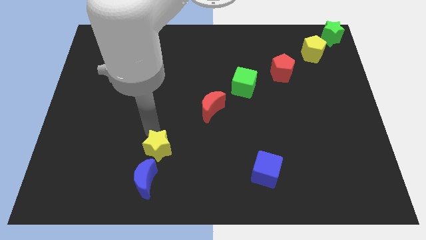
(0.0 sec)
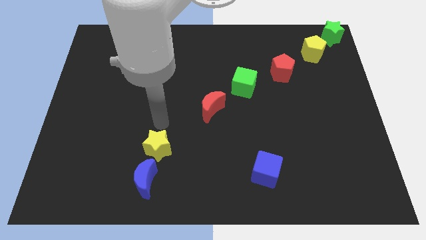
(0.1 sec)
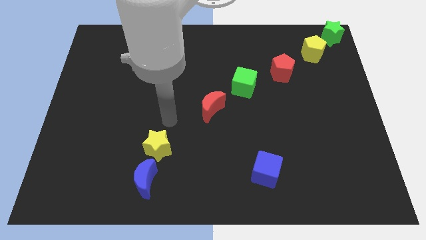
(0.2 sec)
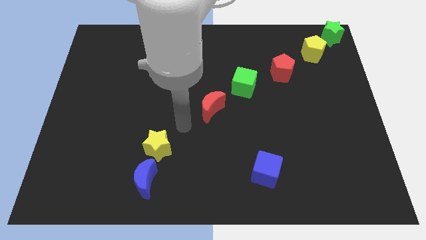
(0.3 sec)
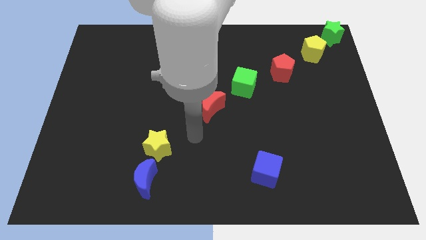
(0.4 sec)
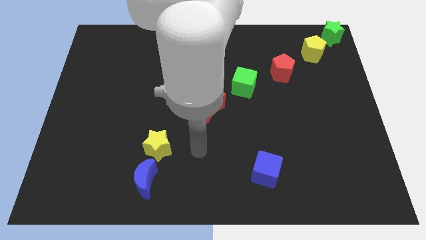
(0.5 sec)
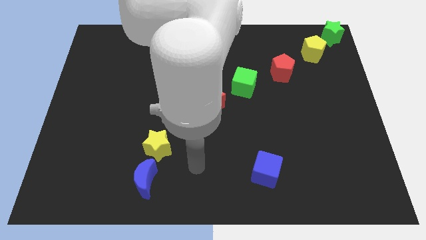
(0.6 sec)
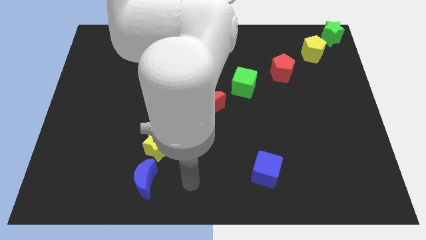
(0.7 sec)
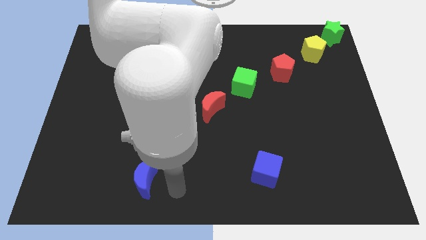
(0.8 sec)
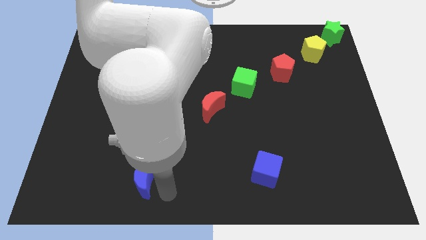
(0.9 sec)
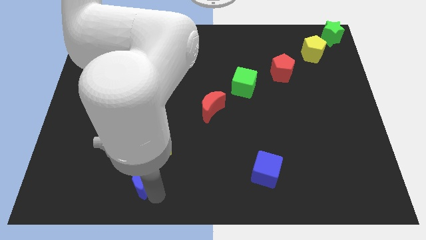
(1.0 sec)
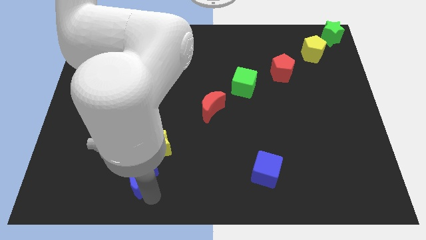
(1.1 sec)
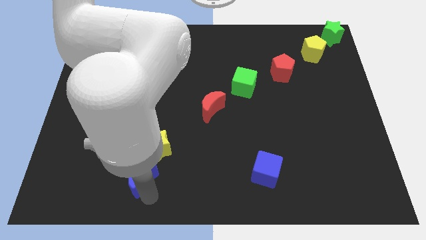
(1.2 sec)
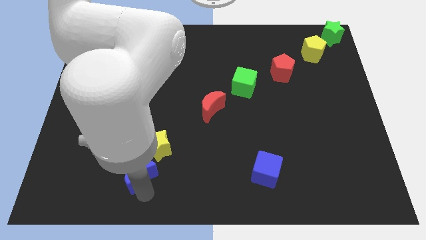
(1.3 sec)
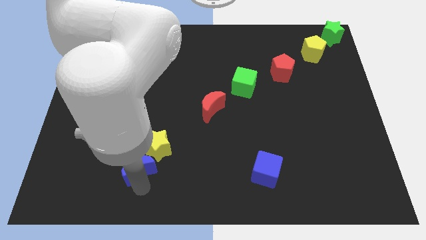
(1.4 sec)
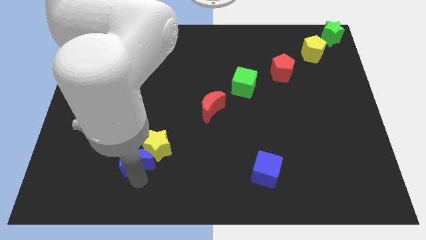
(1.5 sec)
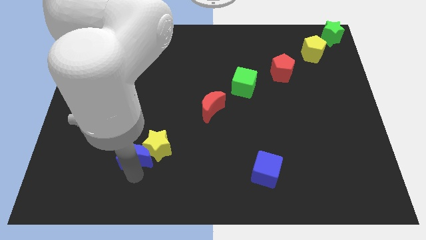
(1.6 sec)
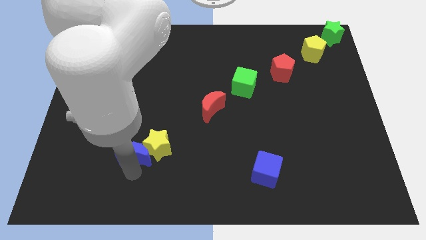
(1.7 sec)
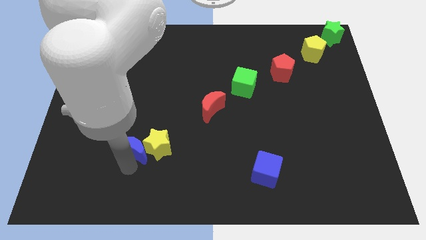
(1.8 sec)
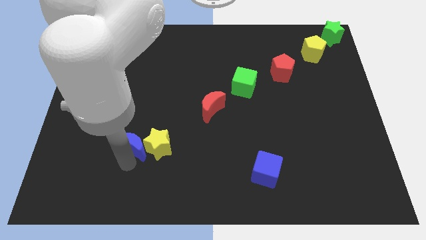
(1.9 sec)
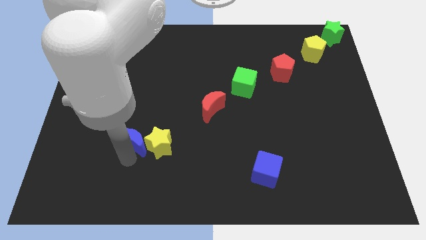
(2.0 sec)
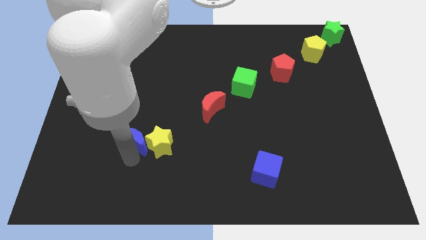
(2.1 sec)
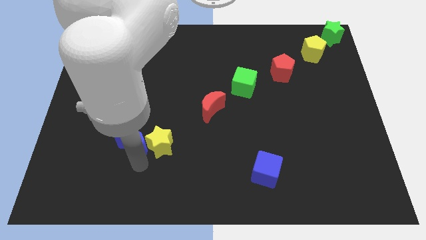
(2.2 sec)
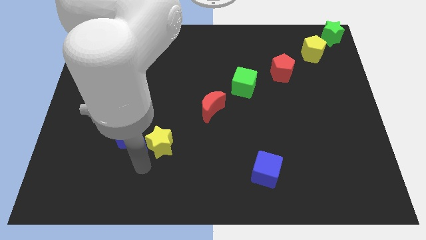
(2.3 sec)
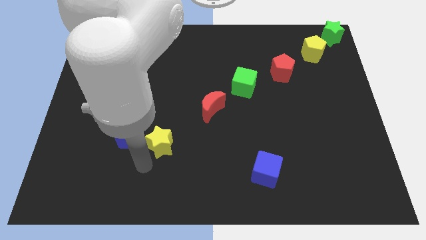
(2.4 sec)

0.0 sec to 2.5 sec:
push the blue moon to the left of the yellow star

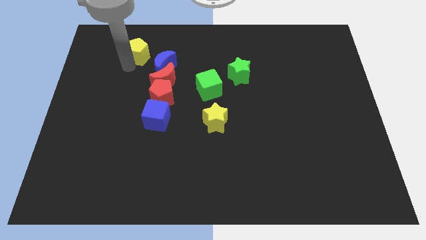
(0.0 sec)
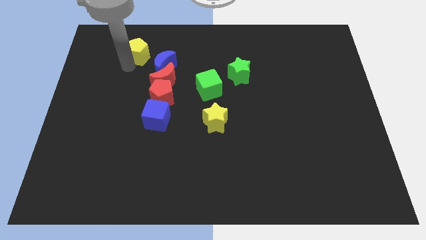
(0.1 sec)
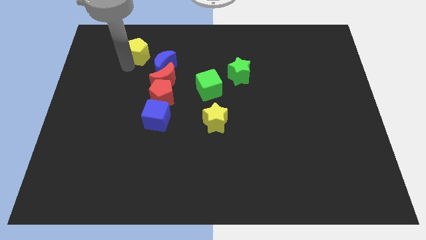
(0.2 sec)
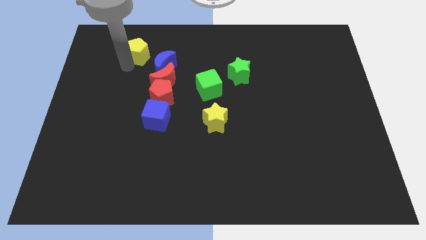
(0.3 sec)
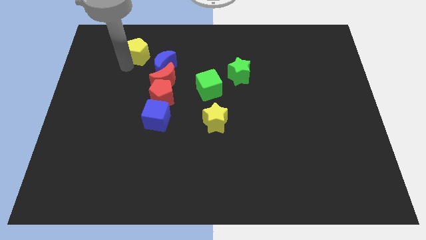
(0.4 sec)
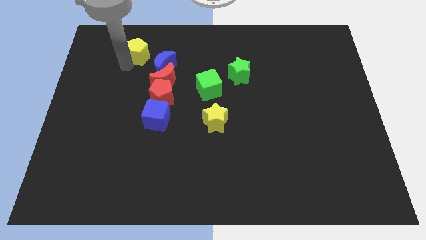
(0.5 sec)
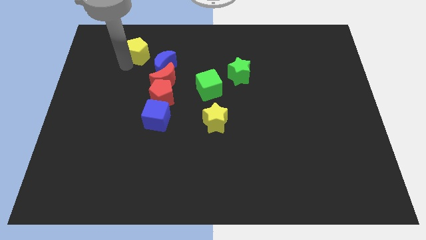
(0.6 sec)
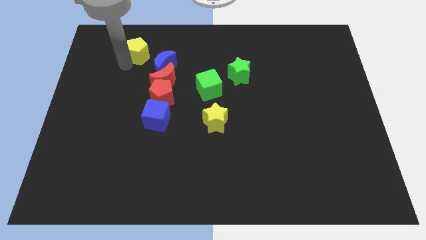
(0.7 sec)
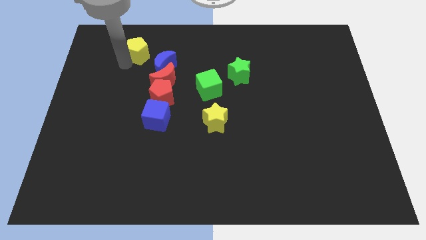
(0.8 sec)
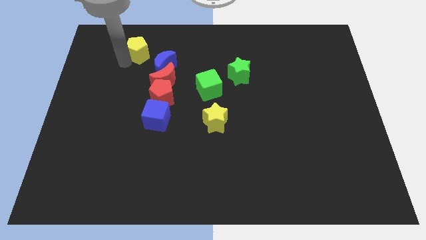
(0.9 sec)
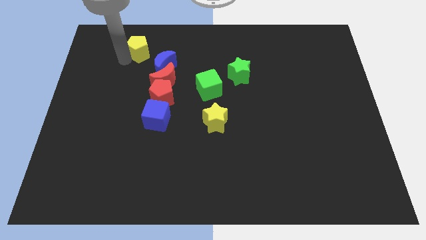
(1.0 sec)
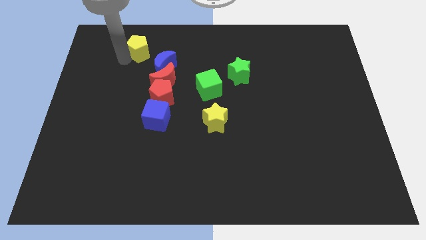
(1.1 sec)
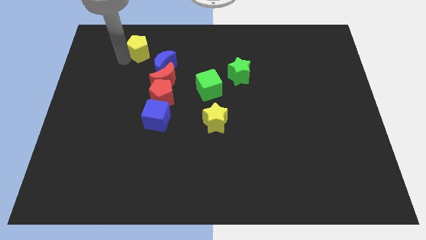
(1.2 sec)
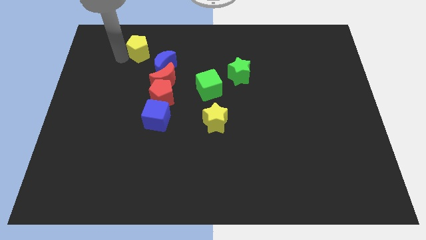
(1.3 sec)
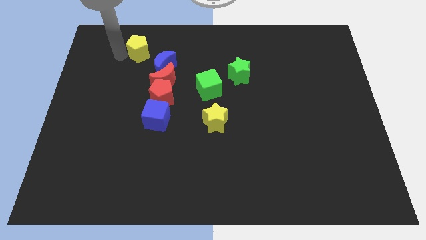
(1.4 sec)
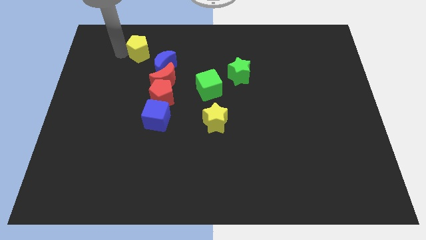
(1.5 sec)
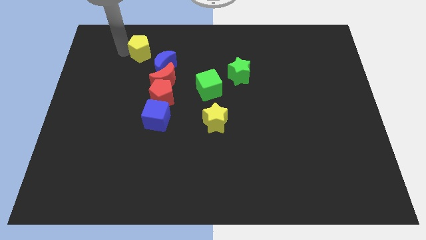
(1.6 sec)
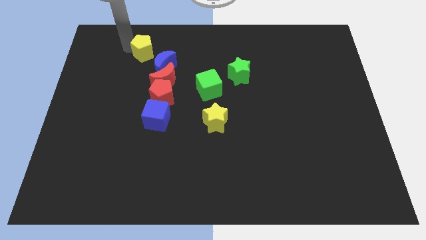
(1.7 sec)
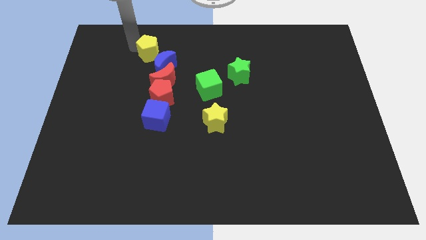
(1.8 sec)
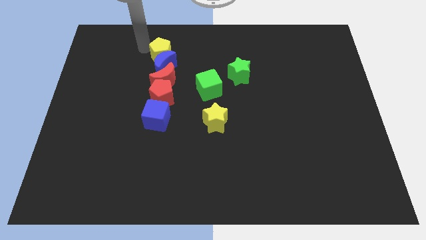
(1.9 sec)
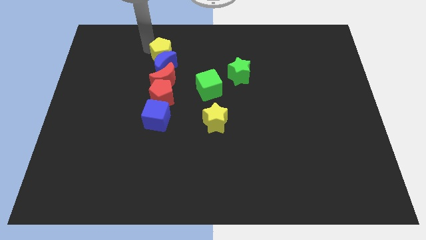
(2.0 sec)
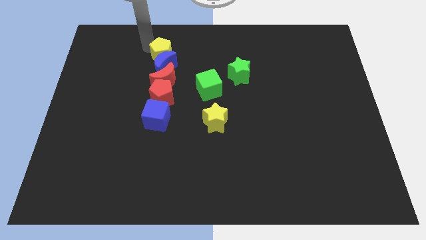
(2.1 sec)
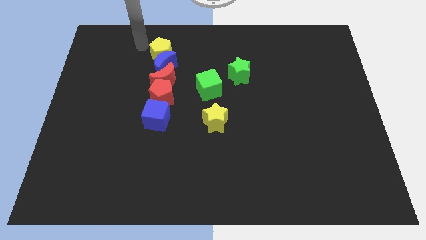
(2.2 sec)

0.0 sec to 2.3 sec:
move the yellow pentagon above the blue moon

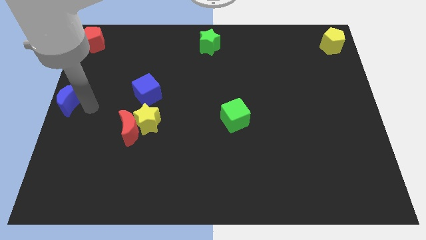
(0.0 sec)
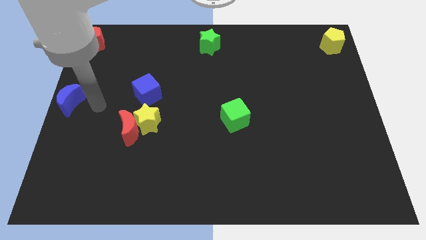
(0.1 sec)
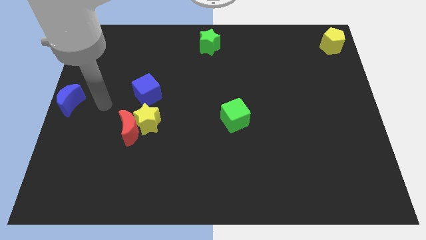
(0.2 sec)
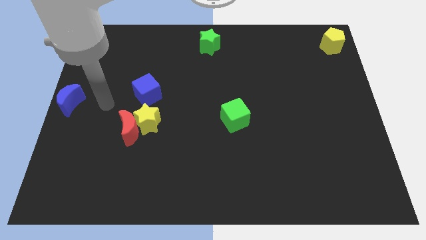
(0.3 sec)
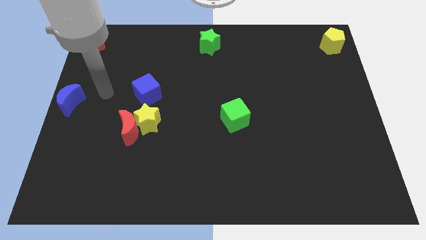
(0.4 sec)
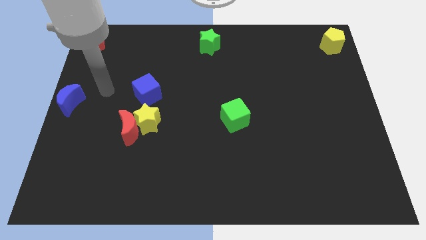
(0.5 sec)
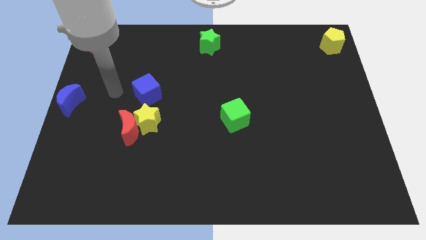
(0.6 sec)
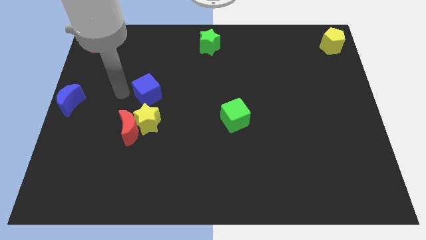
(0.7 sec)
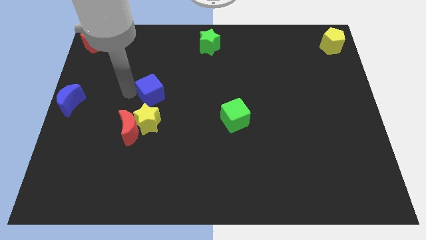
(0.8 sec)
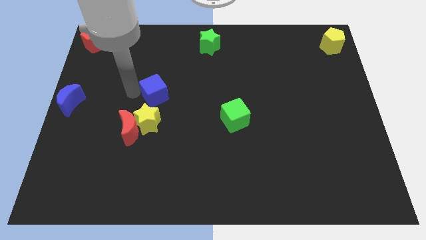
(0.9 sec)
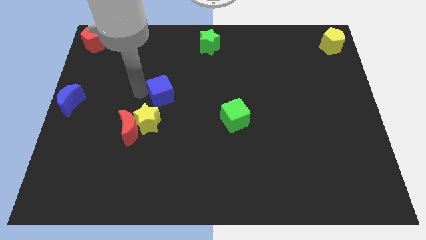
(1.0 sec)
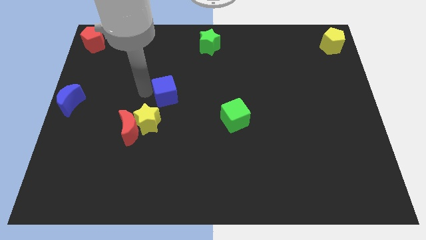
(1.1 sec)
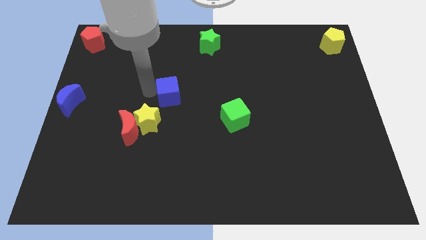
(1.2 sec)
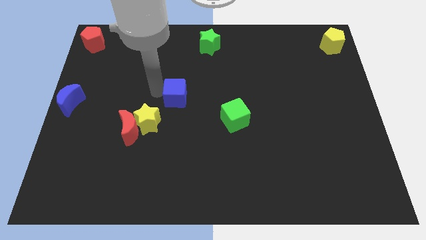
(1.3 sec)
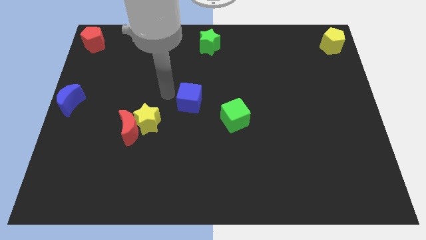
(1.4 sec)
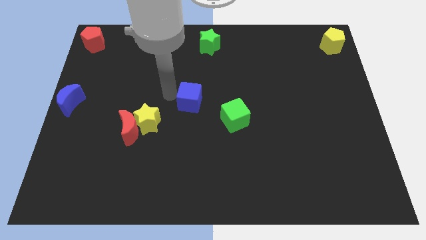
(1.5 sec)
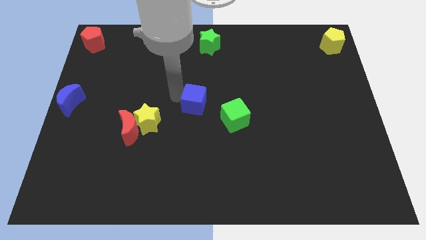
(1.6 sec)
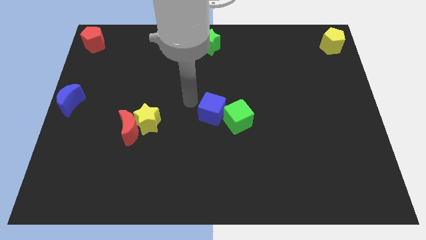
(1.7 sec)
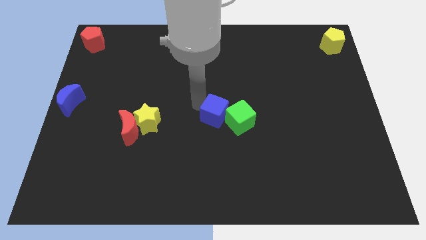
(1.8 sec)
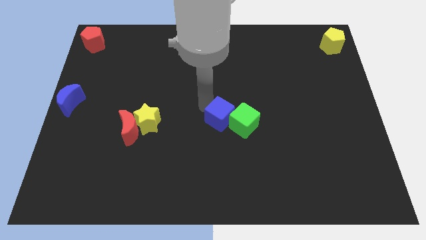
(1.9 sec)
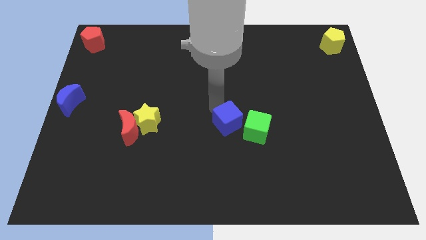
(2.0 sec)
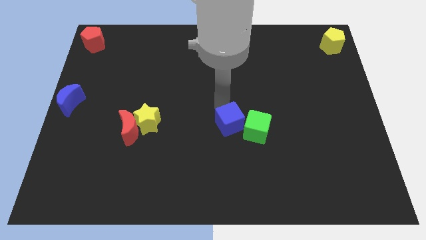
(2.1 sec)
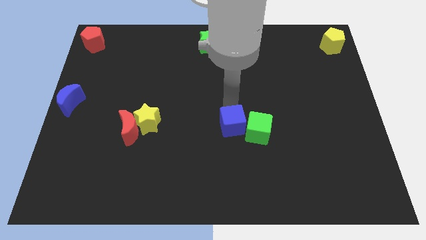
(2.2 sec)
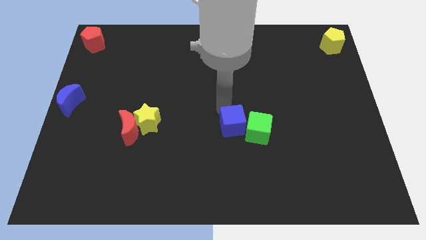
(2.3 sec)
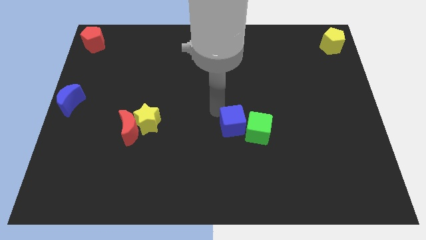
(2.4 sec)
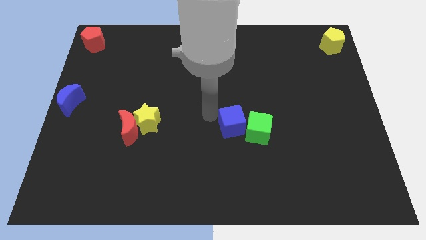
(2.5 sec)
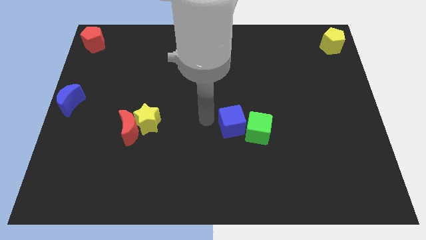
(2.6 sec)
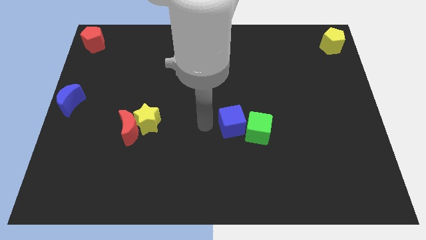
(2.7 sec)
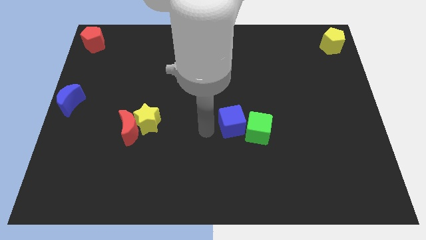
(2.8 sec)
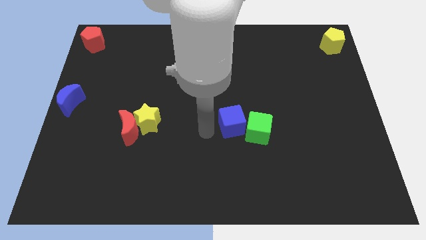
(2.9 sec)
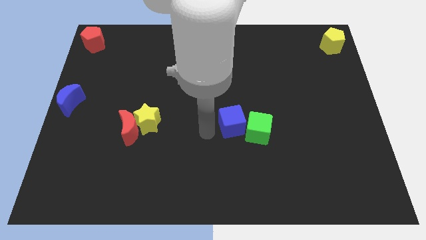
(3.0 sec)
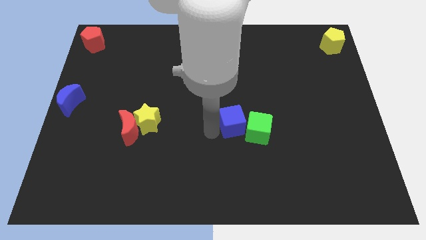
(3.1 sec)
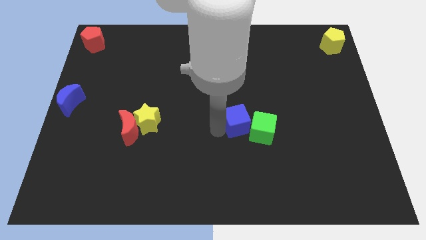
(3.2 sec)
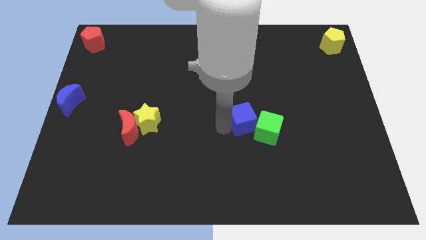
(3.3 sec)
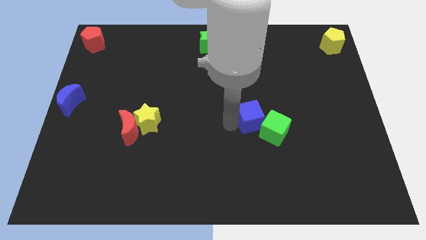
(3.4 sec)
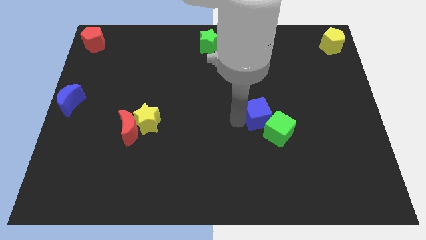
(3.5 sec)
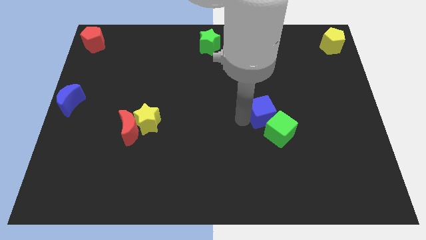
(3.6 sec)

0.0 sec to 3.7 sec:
slide the blue cube into the left side of teh green cube

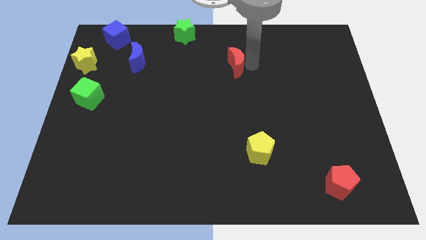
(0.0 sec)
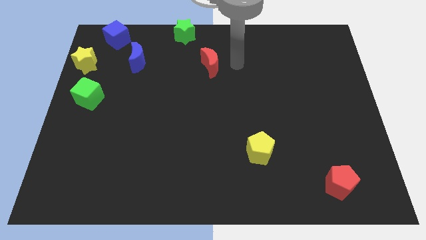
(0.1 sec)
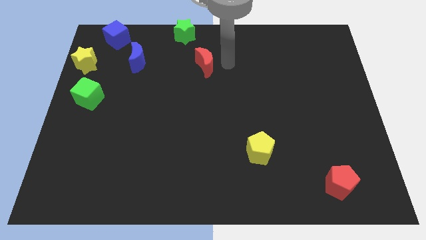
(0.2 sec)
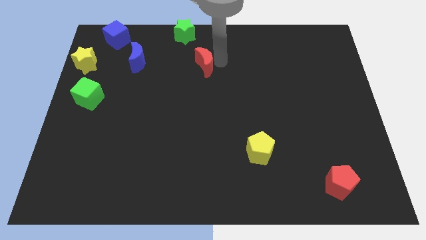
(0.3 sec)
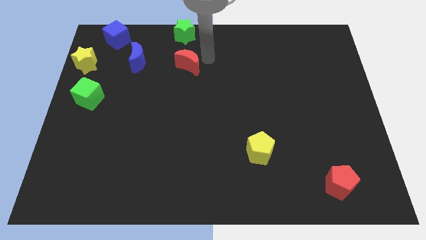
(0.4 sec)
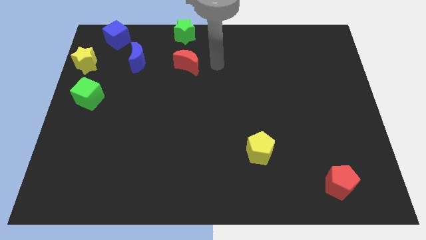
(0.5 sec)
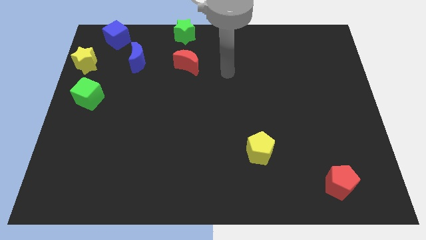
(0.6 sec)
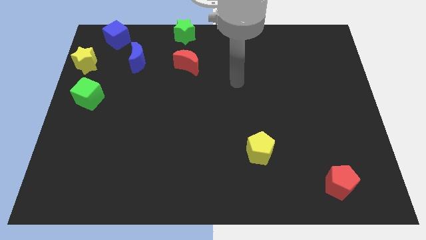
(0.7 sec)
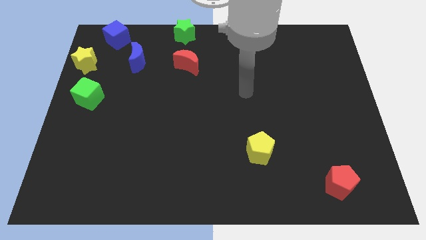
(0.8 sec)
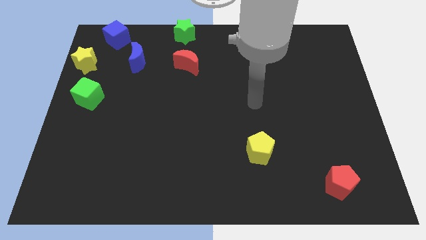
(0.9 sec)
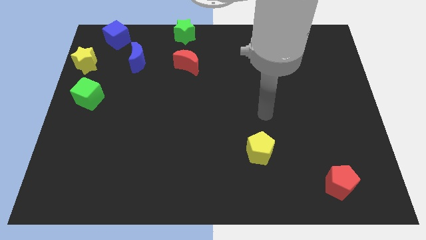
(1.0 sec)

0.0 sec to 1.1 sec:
push red moon below the green star
